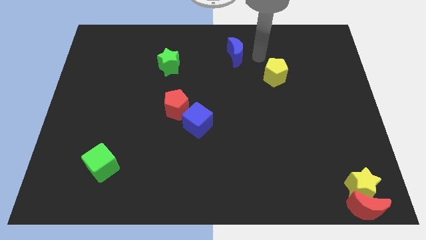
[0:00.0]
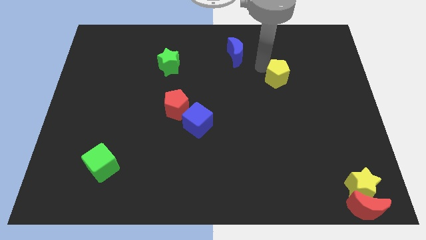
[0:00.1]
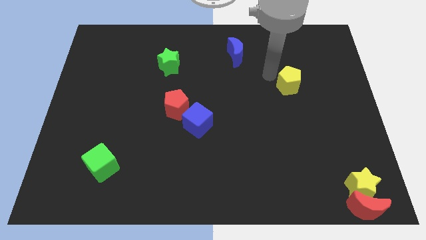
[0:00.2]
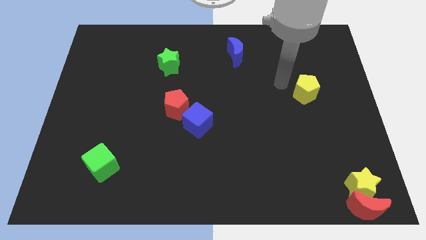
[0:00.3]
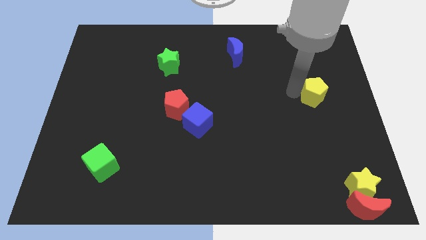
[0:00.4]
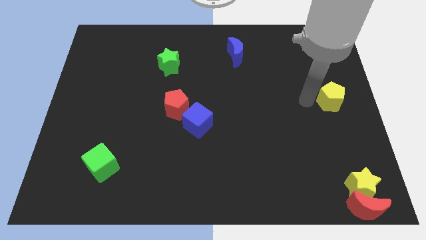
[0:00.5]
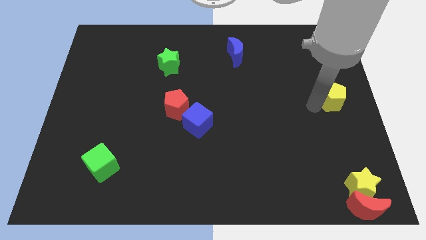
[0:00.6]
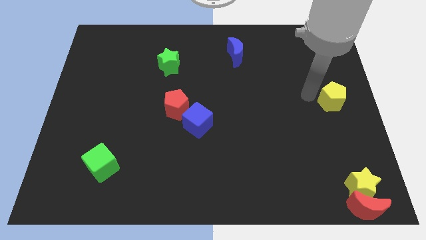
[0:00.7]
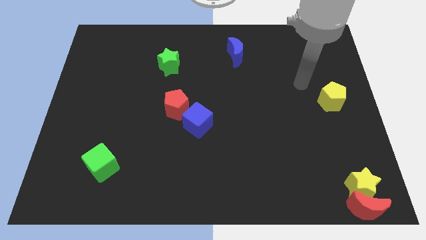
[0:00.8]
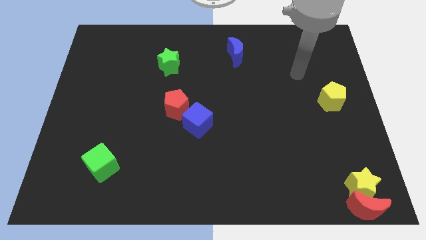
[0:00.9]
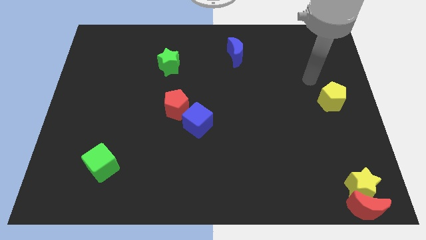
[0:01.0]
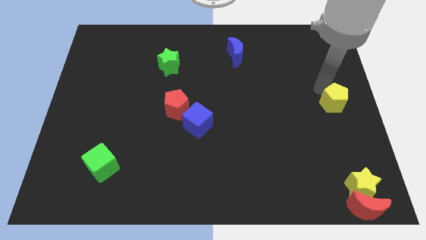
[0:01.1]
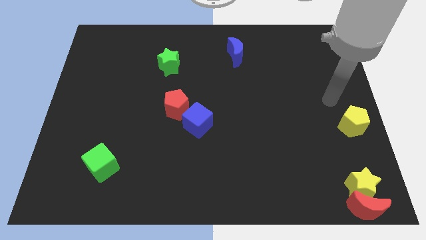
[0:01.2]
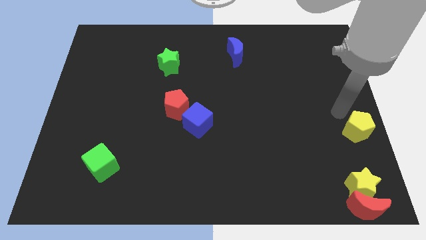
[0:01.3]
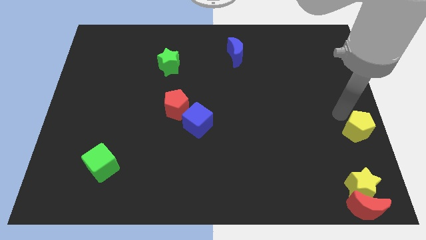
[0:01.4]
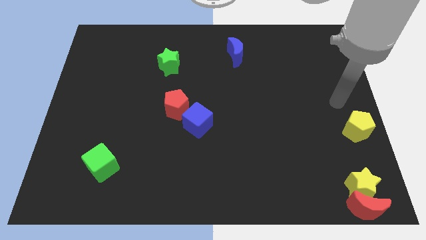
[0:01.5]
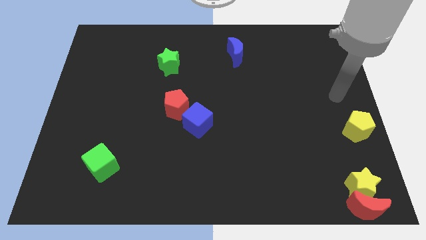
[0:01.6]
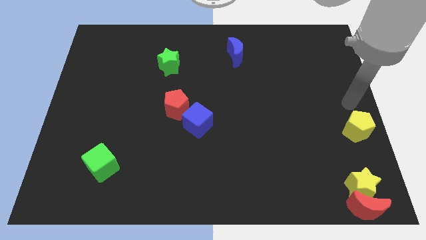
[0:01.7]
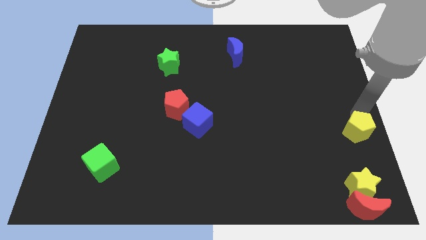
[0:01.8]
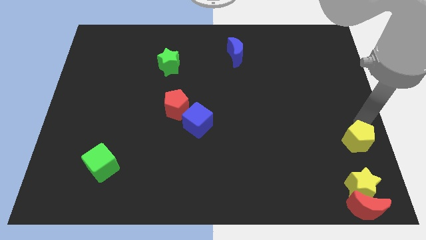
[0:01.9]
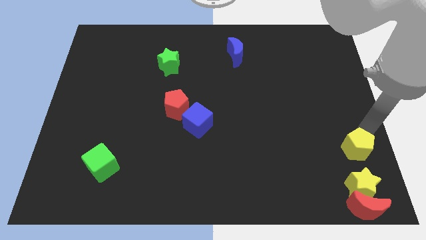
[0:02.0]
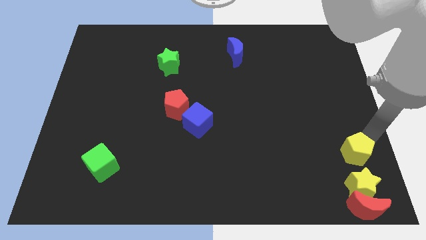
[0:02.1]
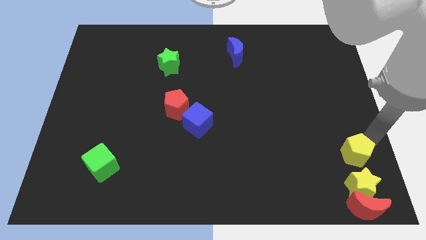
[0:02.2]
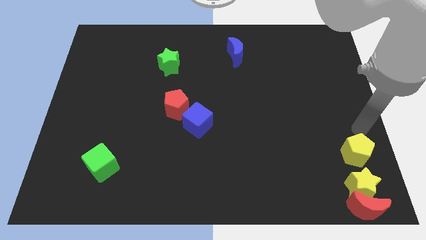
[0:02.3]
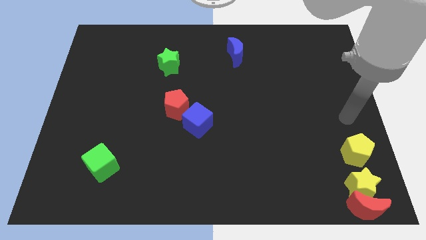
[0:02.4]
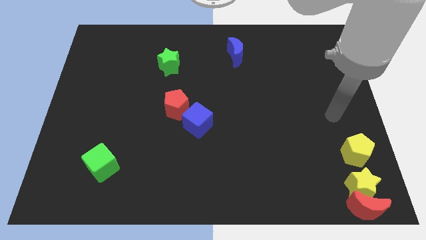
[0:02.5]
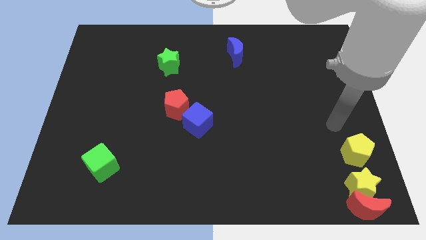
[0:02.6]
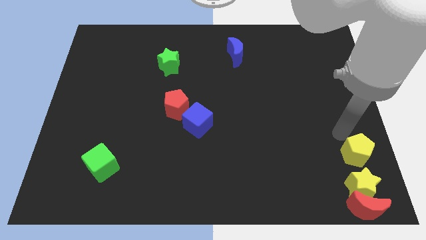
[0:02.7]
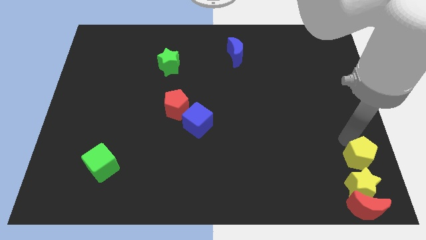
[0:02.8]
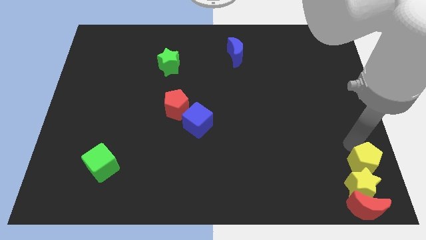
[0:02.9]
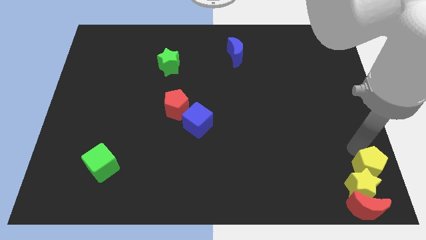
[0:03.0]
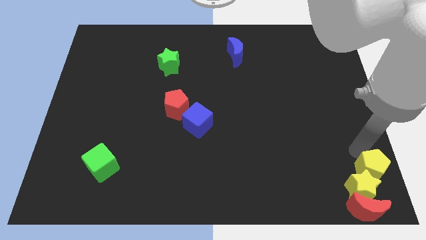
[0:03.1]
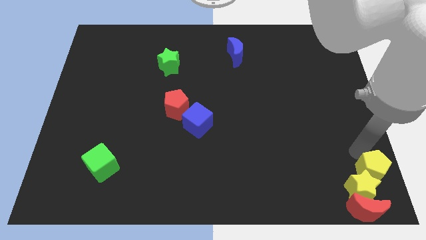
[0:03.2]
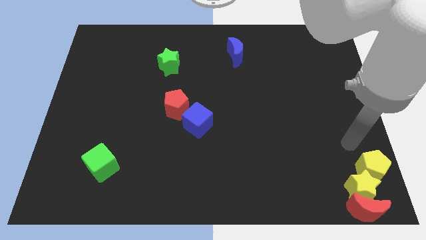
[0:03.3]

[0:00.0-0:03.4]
push the yellow pentagon to the top of the yellow star

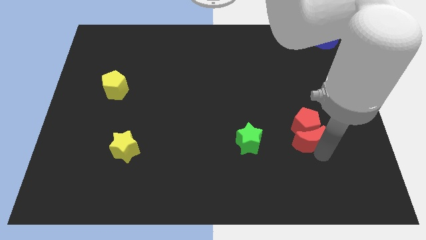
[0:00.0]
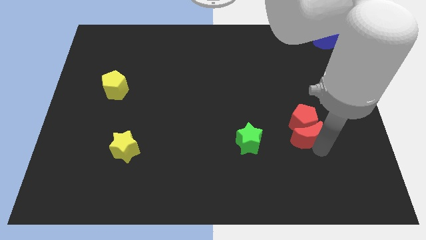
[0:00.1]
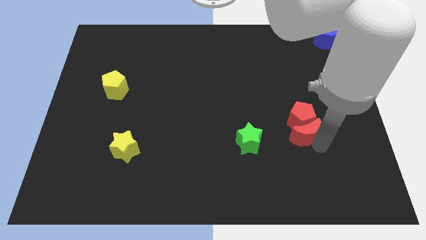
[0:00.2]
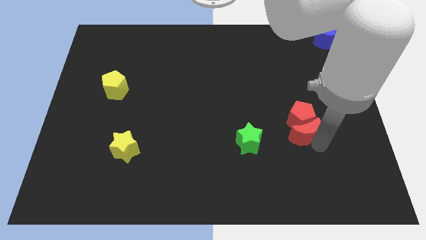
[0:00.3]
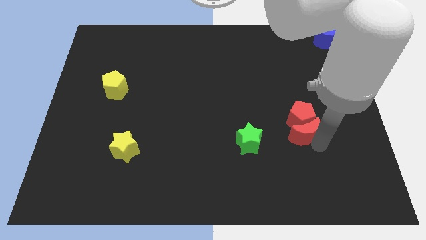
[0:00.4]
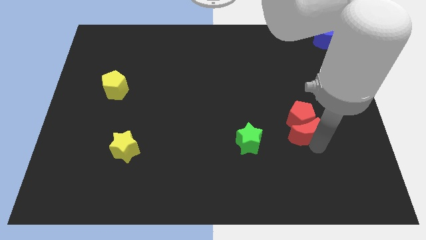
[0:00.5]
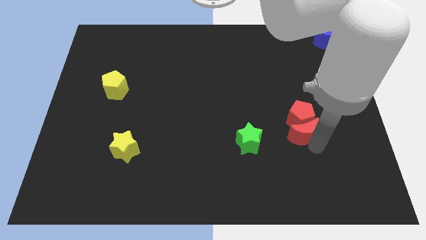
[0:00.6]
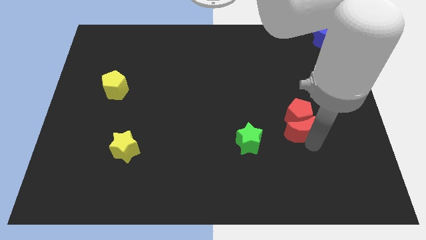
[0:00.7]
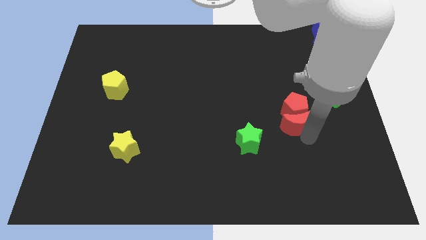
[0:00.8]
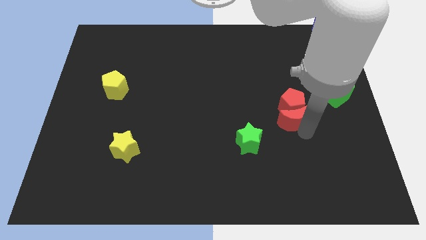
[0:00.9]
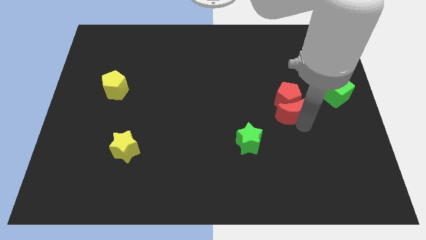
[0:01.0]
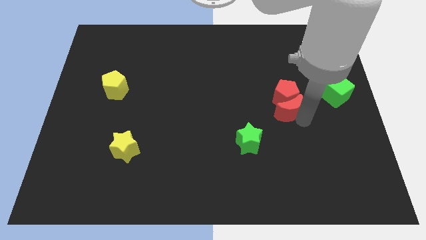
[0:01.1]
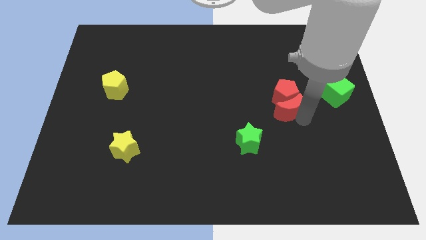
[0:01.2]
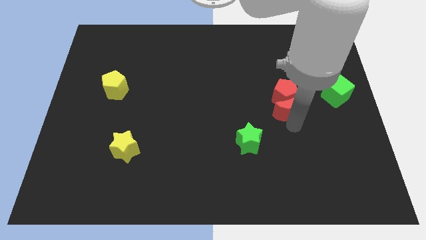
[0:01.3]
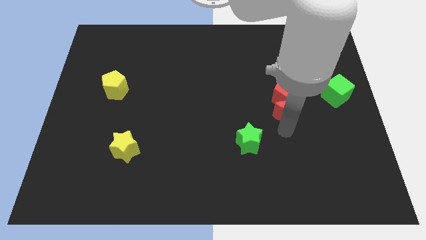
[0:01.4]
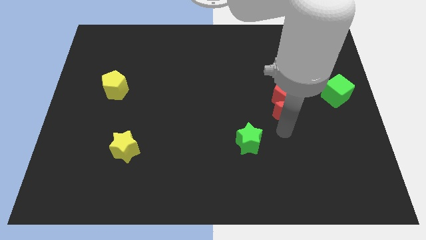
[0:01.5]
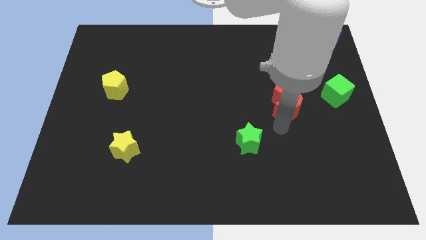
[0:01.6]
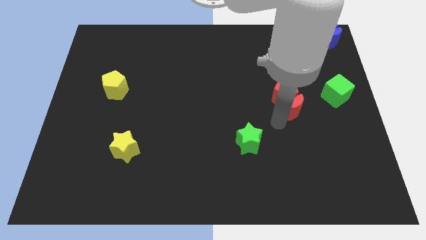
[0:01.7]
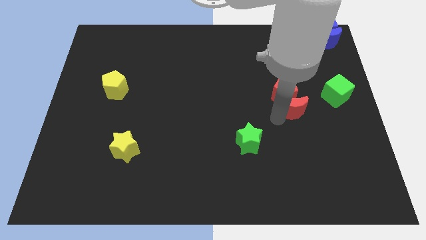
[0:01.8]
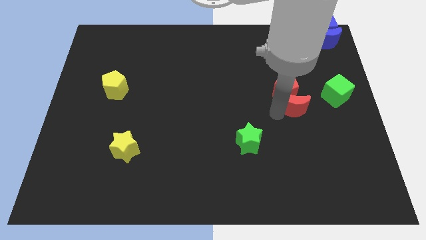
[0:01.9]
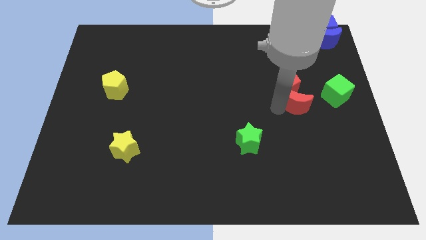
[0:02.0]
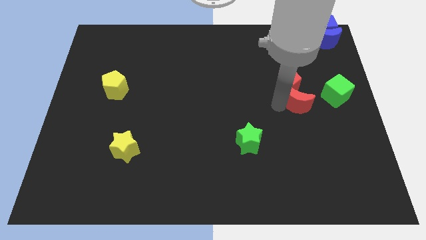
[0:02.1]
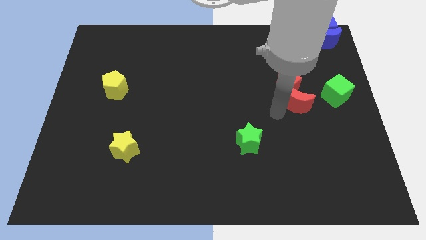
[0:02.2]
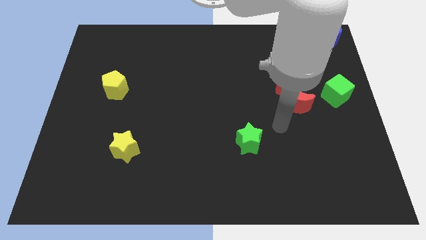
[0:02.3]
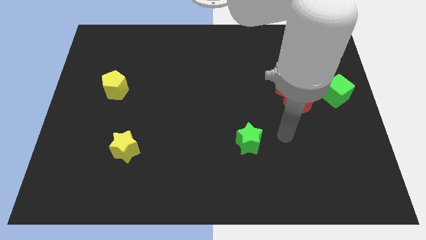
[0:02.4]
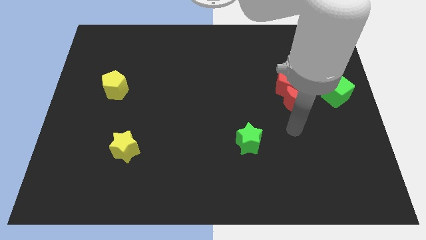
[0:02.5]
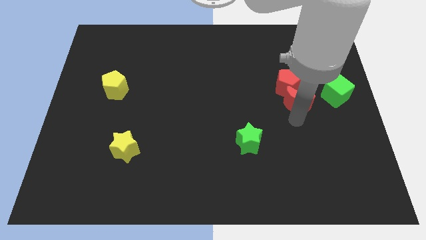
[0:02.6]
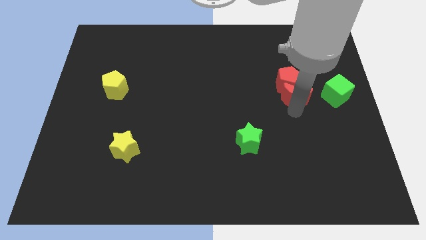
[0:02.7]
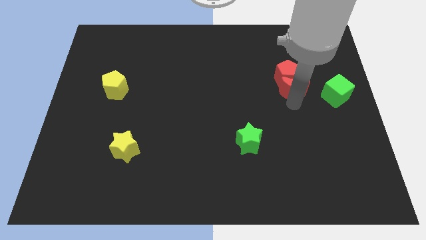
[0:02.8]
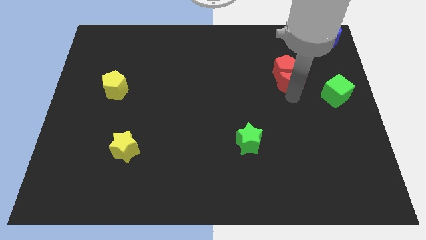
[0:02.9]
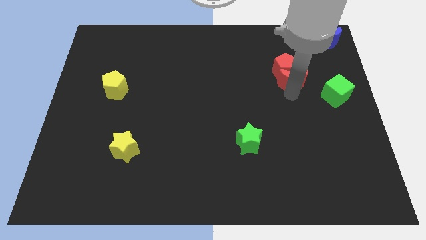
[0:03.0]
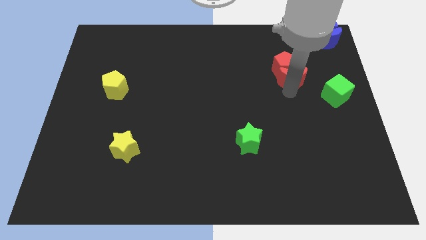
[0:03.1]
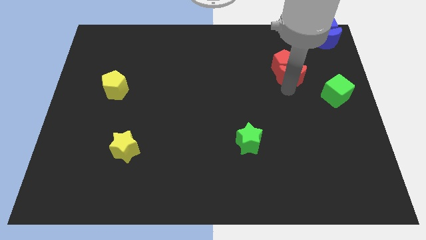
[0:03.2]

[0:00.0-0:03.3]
push red blocks upwards

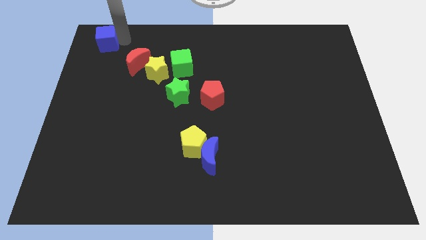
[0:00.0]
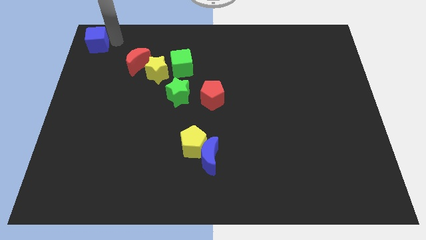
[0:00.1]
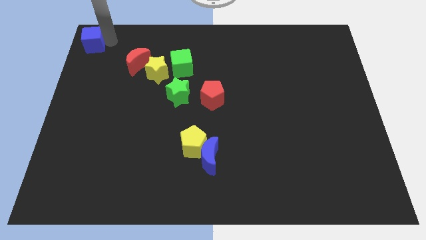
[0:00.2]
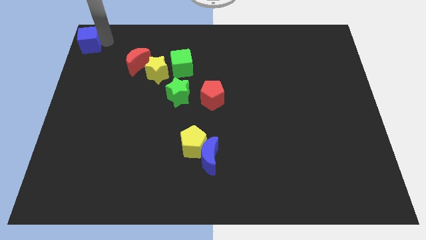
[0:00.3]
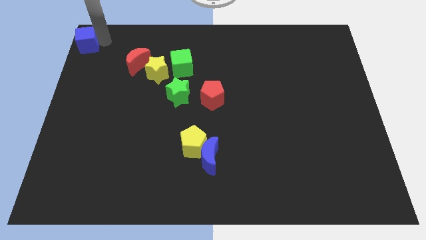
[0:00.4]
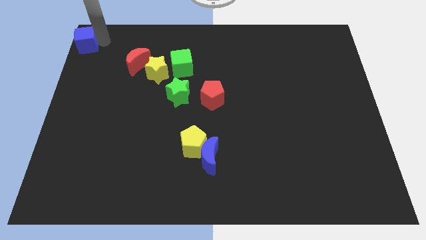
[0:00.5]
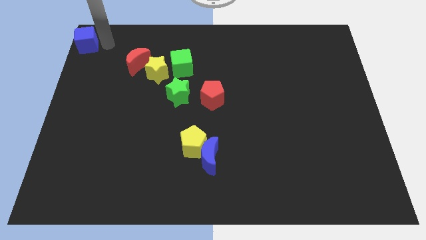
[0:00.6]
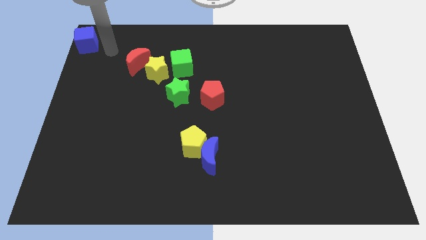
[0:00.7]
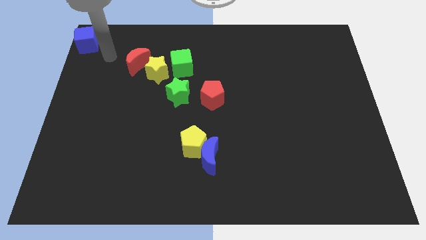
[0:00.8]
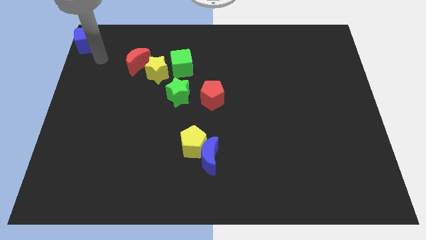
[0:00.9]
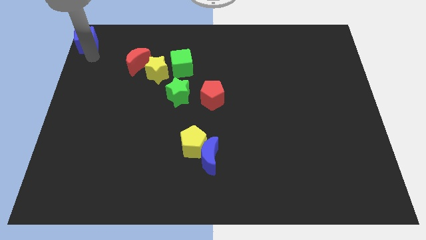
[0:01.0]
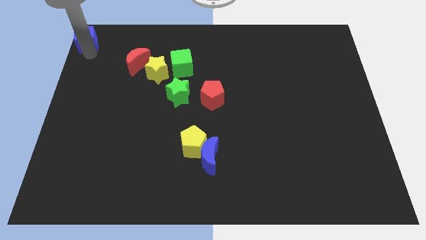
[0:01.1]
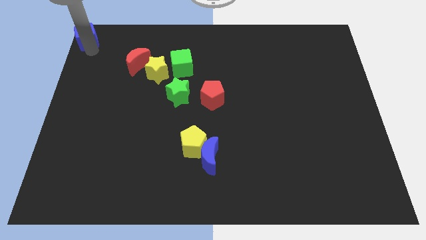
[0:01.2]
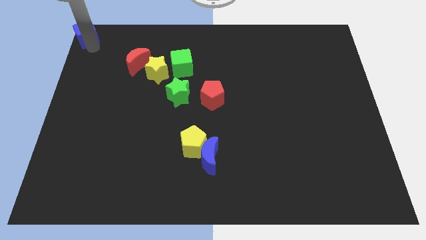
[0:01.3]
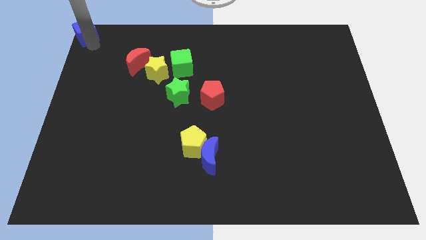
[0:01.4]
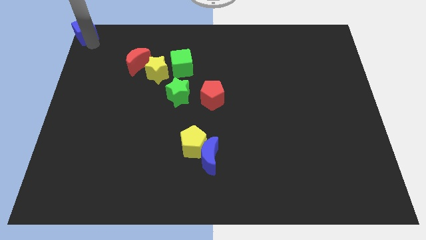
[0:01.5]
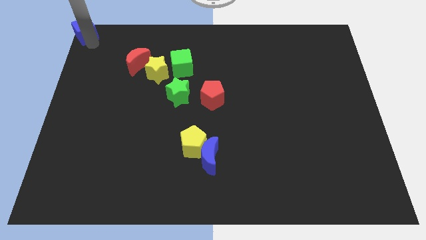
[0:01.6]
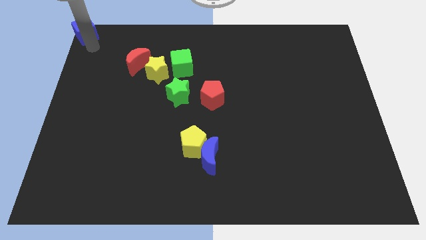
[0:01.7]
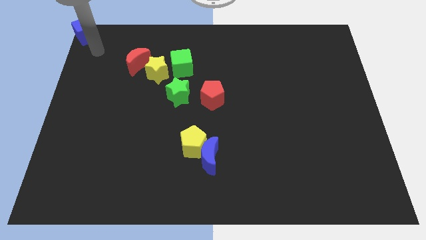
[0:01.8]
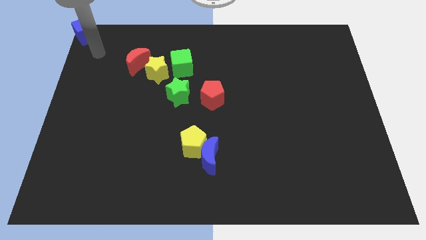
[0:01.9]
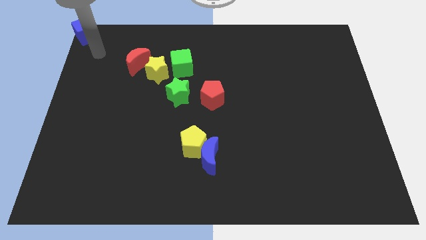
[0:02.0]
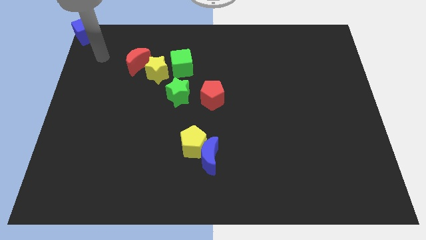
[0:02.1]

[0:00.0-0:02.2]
place the blue cube at the top left corner of the board

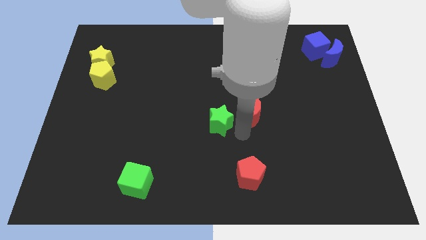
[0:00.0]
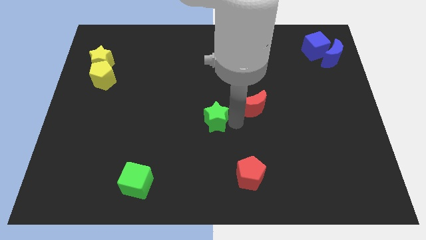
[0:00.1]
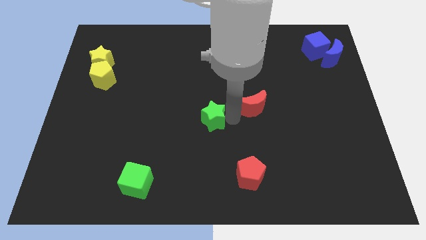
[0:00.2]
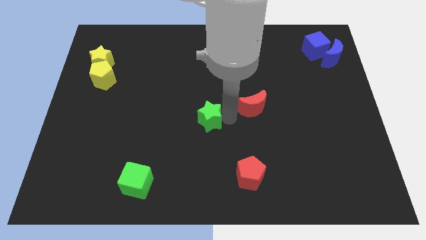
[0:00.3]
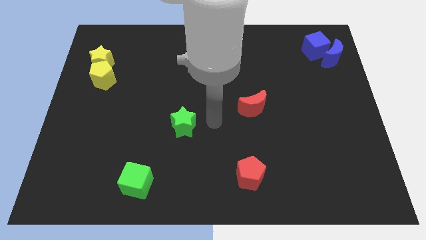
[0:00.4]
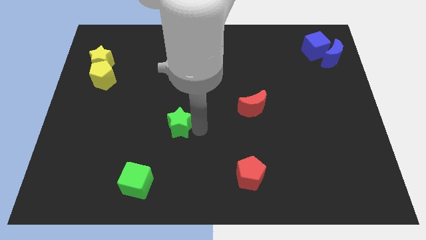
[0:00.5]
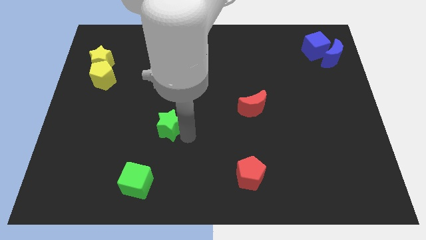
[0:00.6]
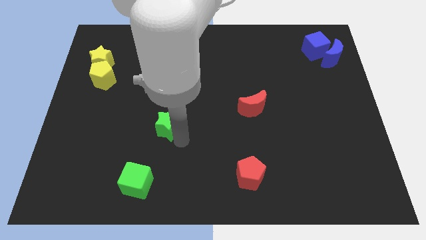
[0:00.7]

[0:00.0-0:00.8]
separate the green star and red moon
